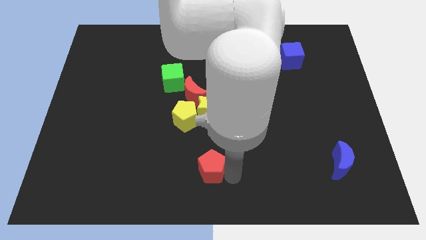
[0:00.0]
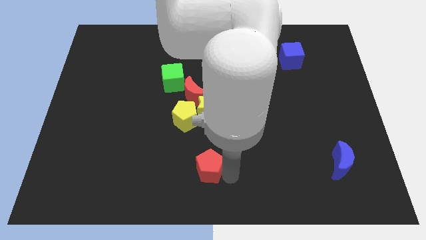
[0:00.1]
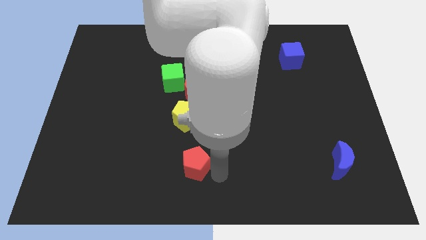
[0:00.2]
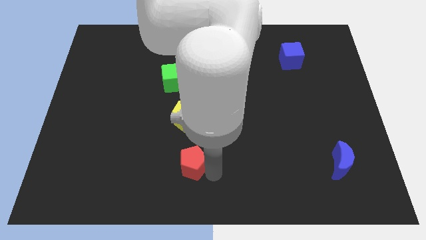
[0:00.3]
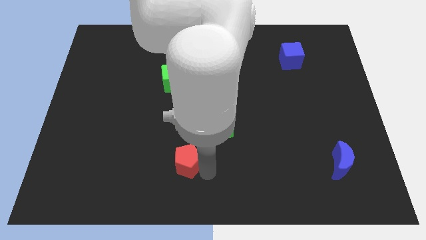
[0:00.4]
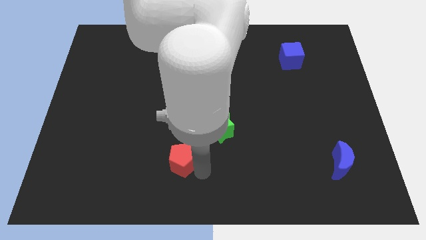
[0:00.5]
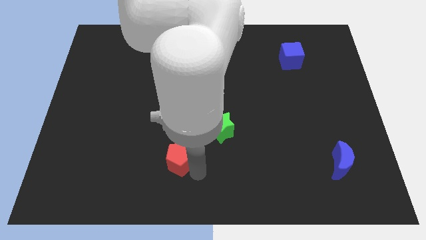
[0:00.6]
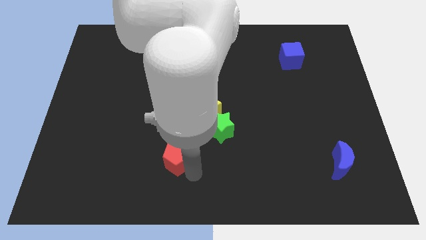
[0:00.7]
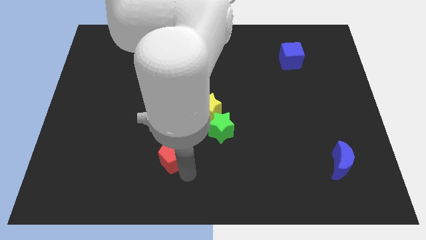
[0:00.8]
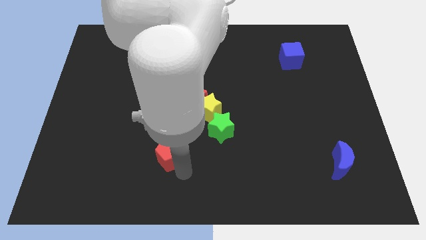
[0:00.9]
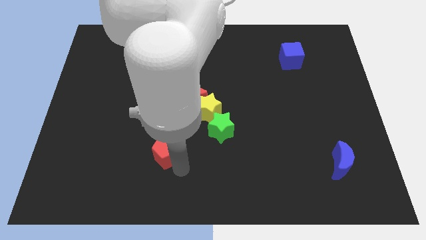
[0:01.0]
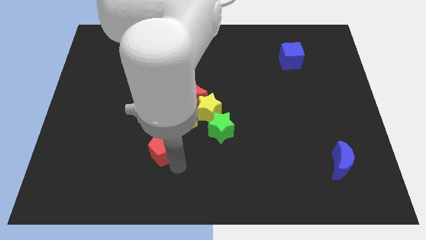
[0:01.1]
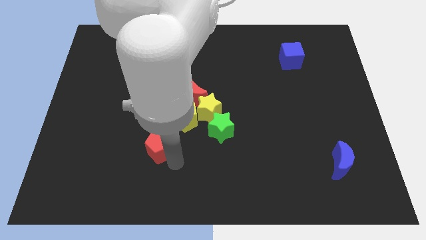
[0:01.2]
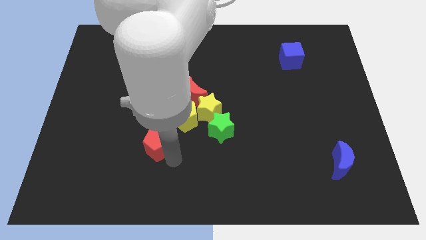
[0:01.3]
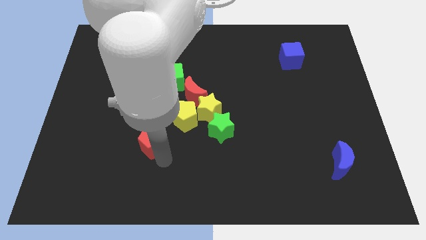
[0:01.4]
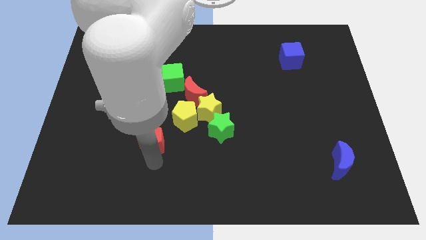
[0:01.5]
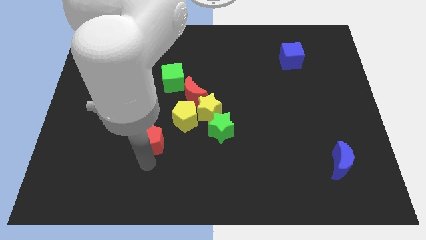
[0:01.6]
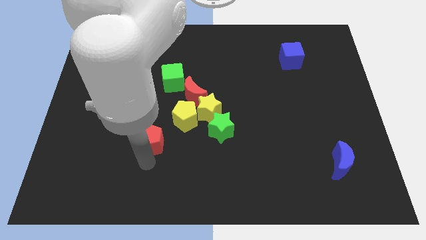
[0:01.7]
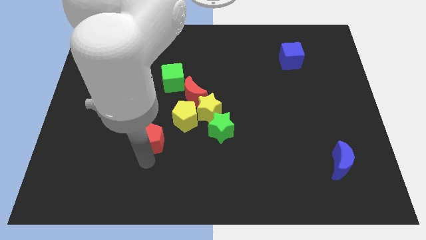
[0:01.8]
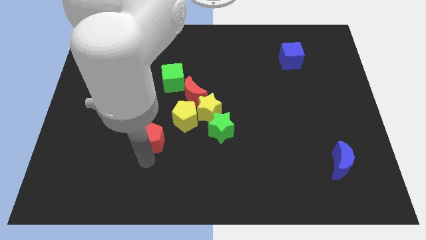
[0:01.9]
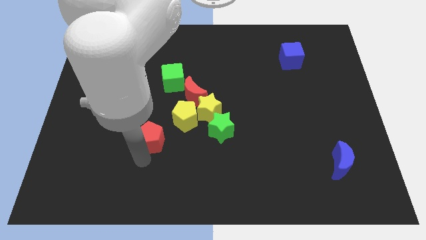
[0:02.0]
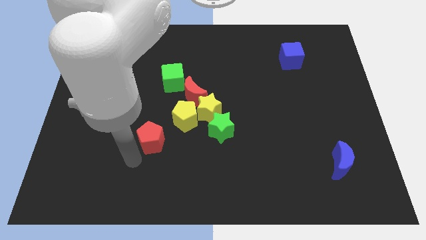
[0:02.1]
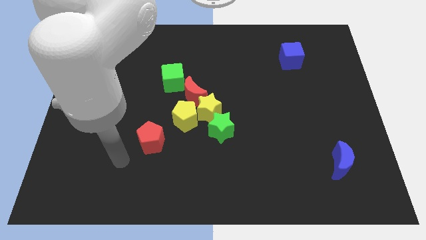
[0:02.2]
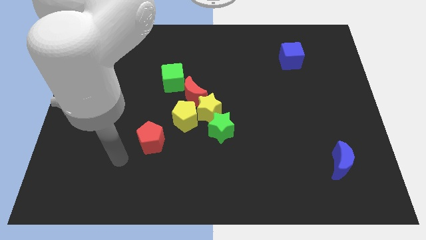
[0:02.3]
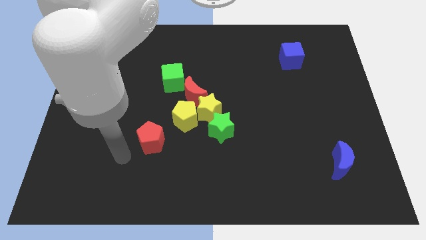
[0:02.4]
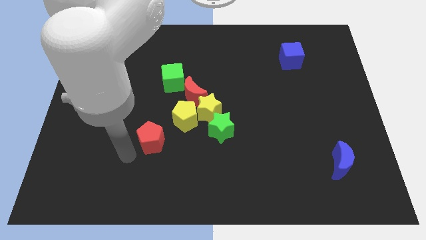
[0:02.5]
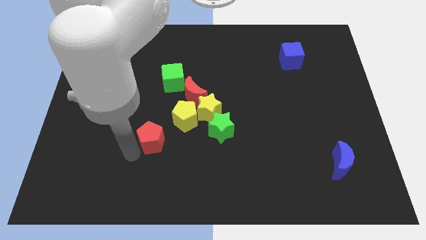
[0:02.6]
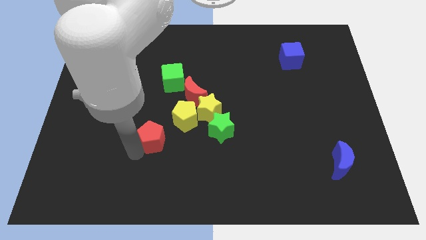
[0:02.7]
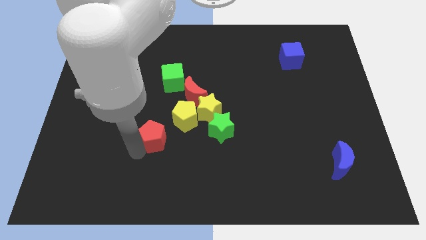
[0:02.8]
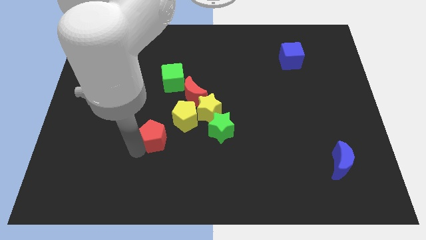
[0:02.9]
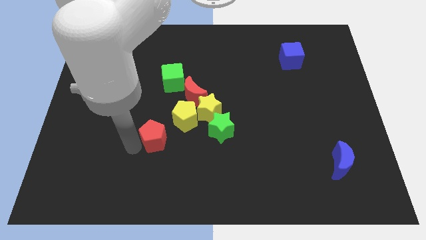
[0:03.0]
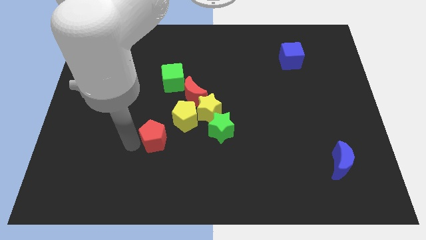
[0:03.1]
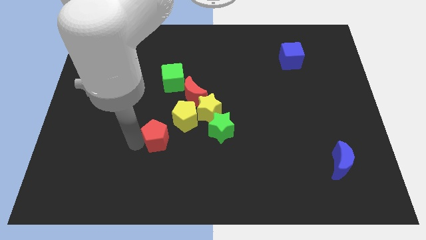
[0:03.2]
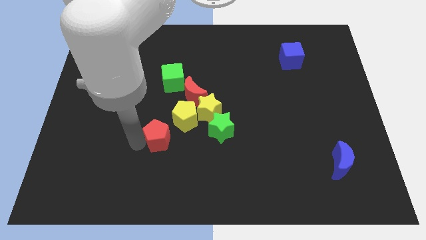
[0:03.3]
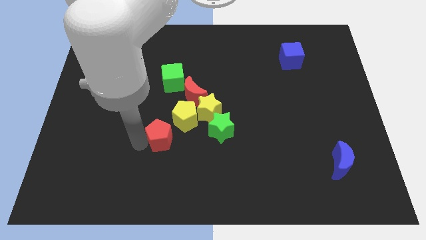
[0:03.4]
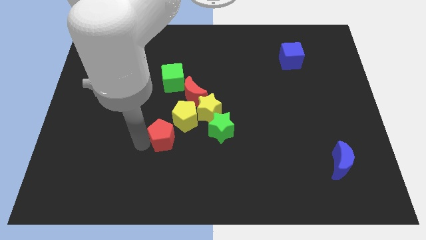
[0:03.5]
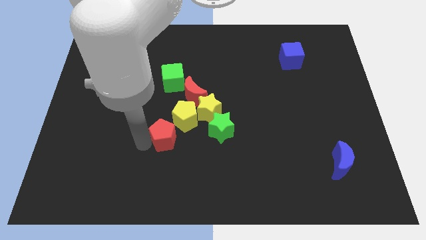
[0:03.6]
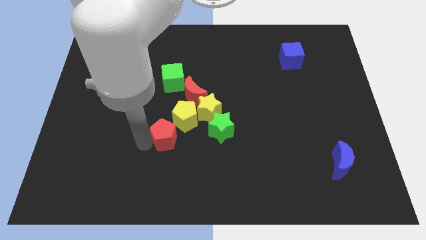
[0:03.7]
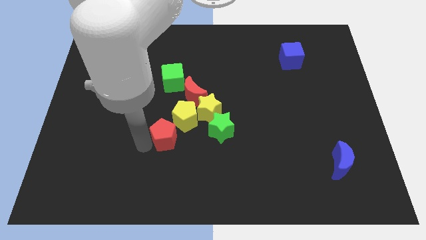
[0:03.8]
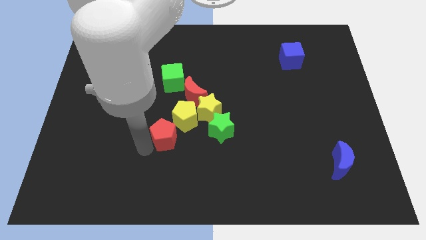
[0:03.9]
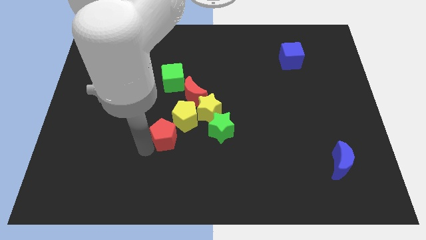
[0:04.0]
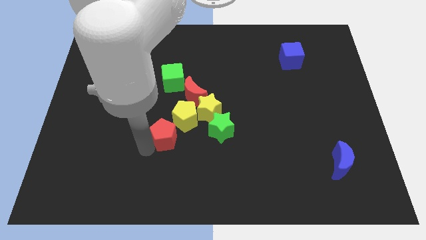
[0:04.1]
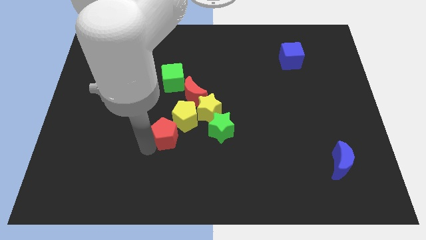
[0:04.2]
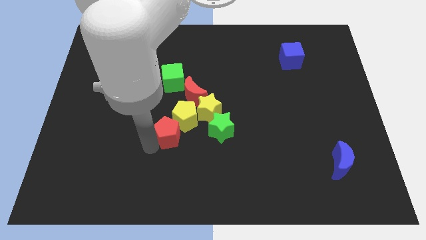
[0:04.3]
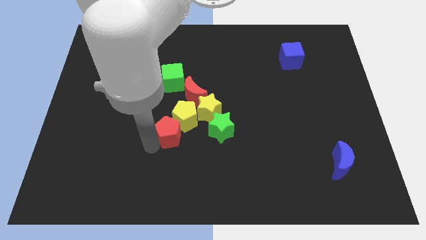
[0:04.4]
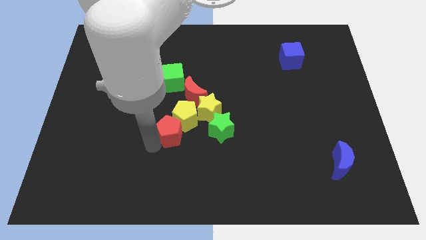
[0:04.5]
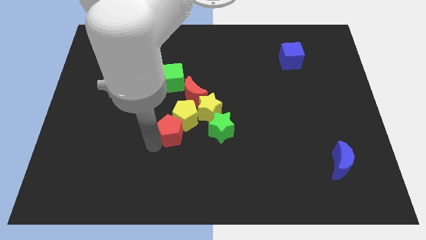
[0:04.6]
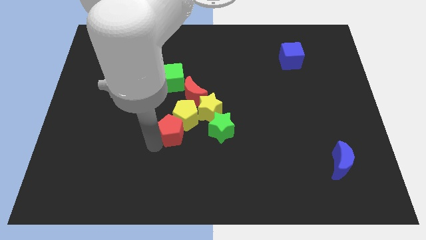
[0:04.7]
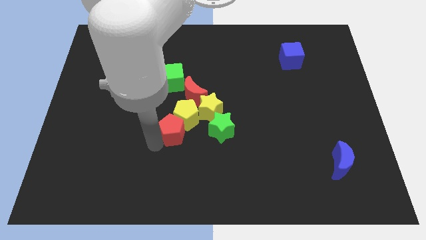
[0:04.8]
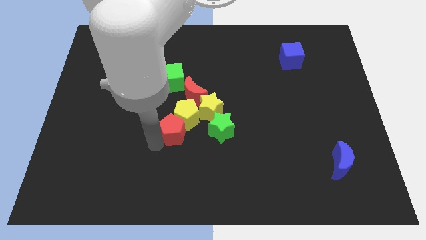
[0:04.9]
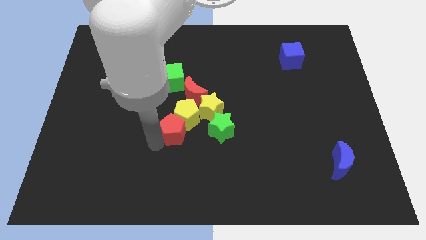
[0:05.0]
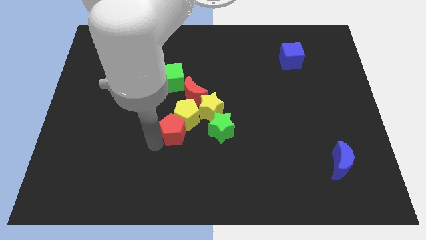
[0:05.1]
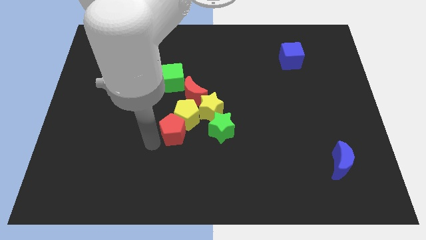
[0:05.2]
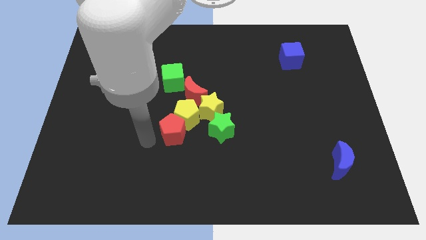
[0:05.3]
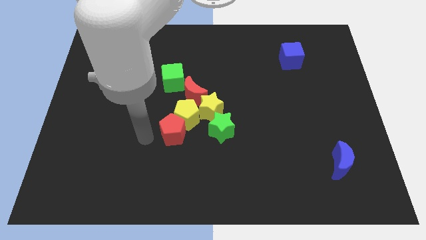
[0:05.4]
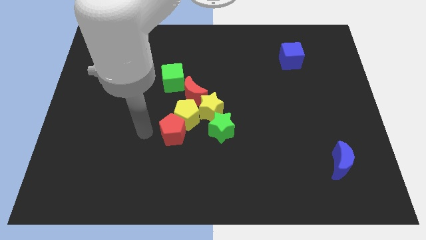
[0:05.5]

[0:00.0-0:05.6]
push the red pentagon into the yellow pentagon

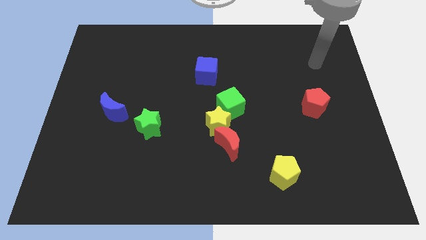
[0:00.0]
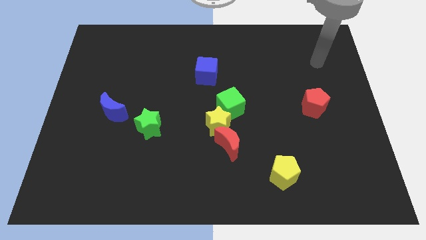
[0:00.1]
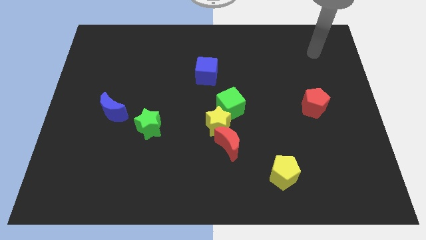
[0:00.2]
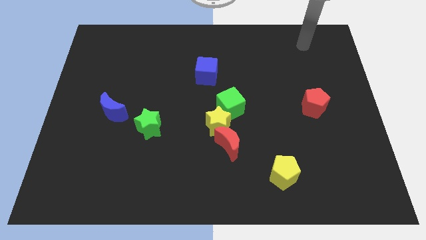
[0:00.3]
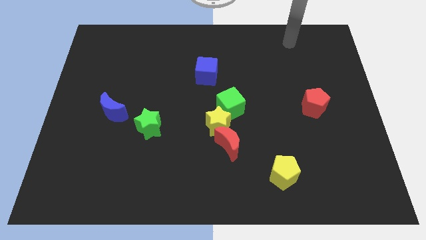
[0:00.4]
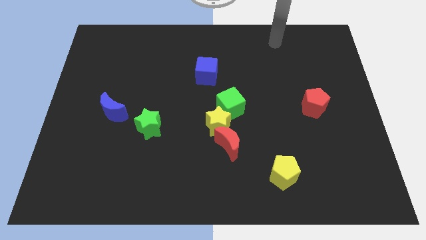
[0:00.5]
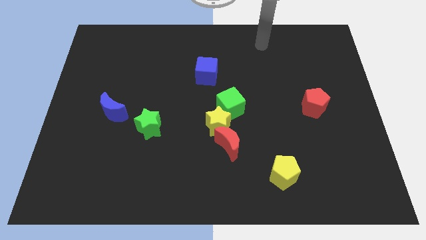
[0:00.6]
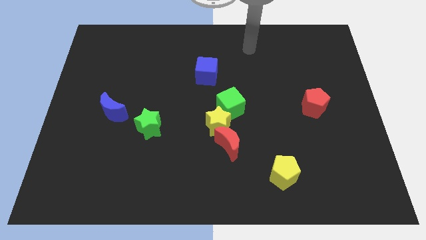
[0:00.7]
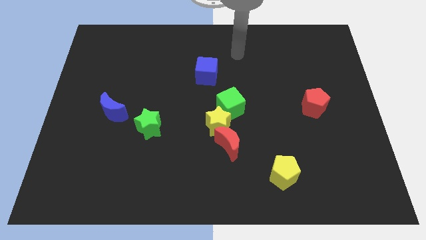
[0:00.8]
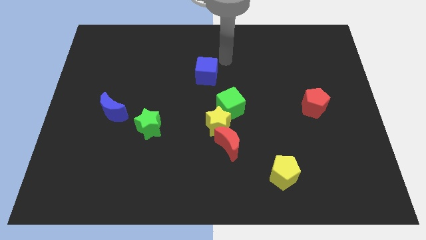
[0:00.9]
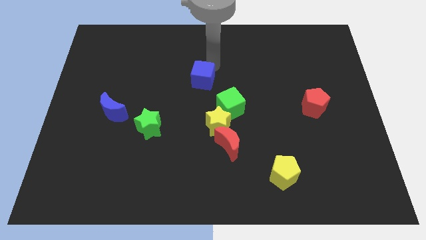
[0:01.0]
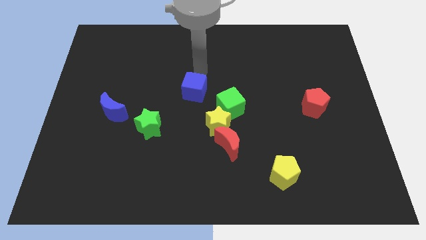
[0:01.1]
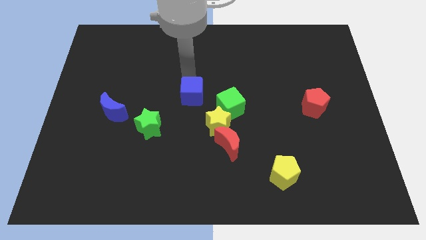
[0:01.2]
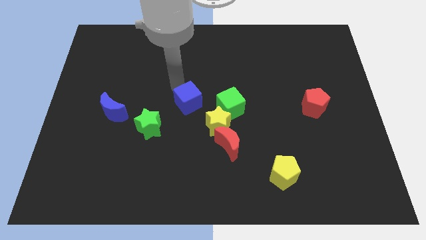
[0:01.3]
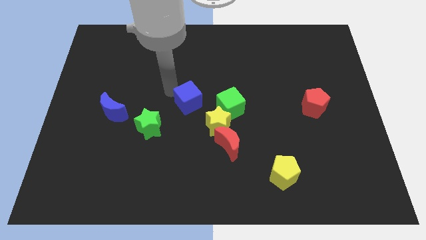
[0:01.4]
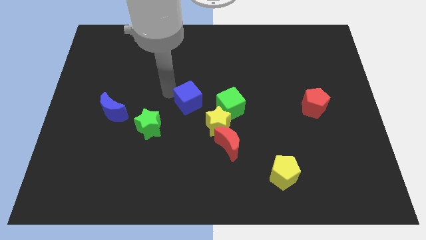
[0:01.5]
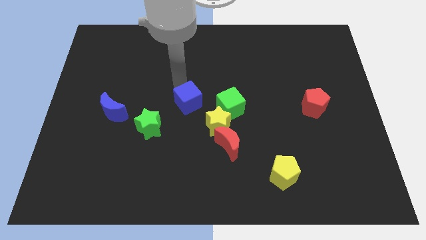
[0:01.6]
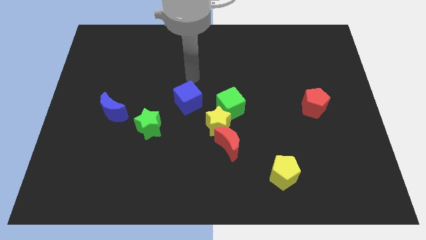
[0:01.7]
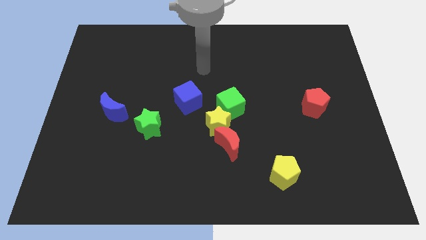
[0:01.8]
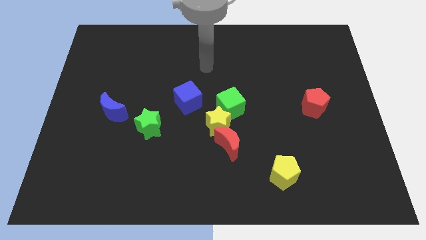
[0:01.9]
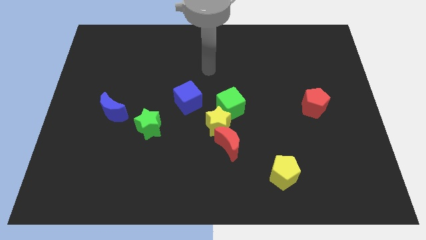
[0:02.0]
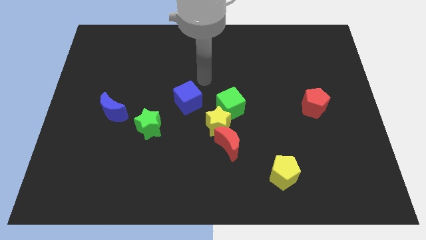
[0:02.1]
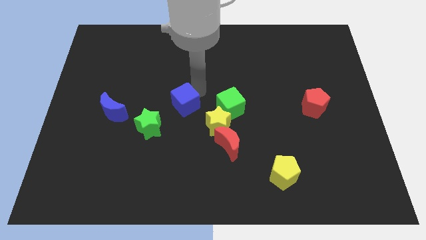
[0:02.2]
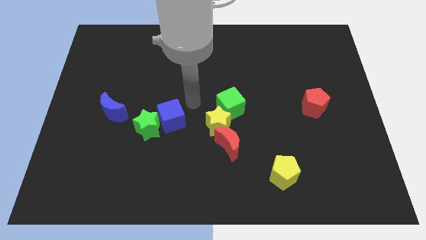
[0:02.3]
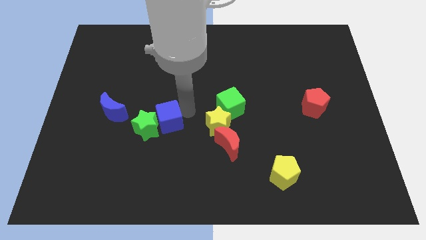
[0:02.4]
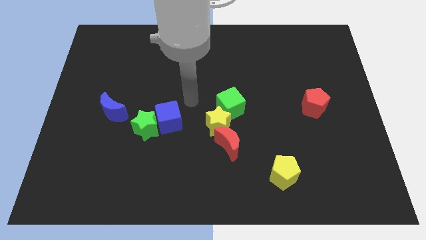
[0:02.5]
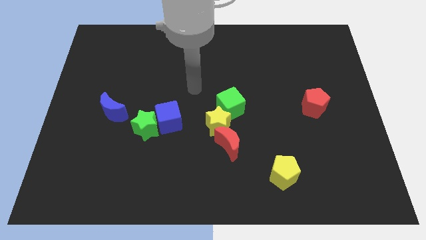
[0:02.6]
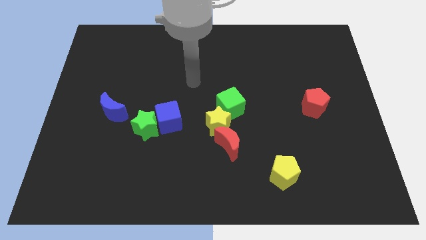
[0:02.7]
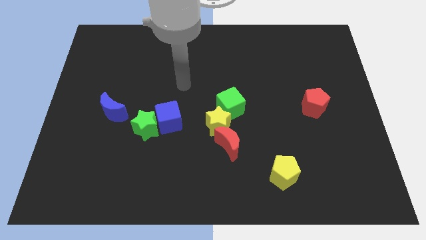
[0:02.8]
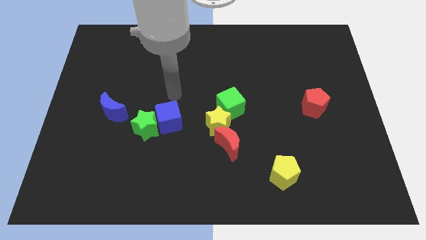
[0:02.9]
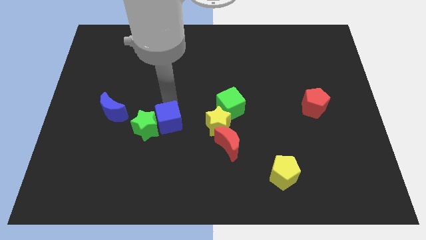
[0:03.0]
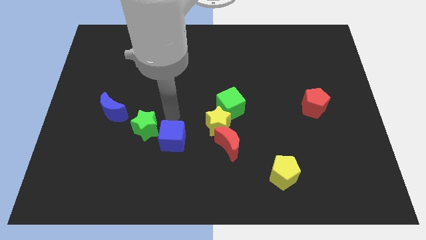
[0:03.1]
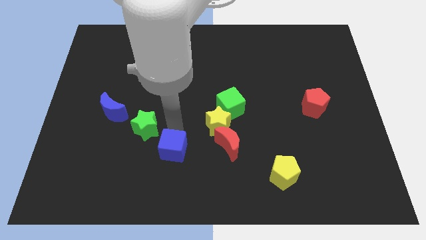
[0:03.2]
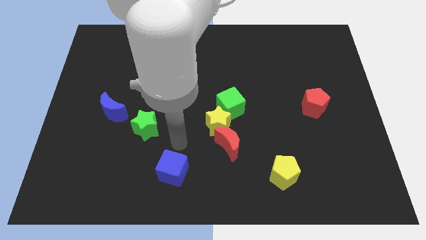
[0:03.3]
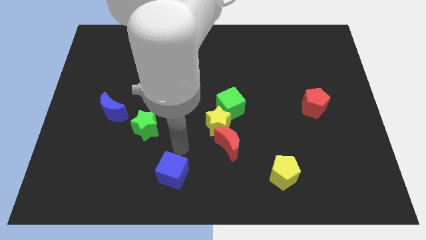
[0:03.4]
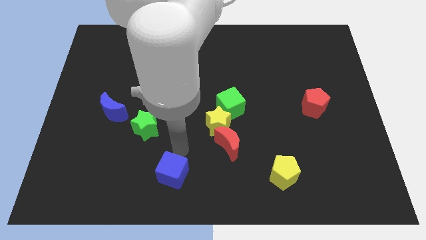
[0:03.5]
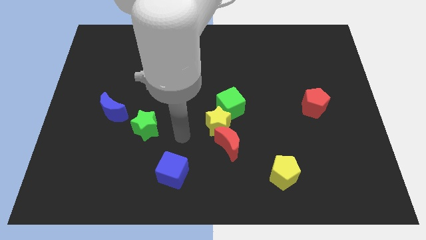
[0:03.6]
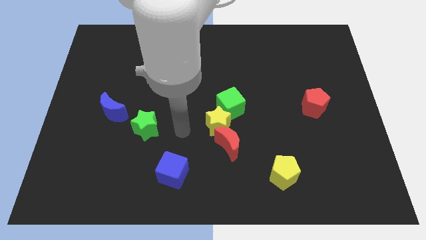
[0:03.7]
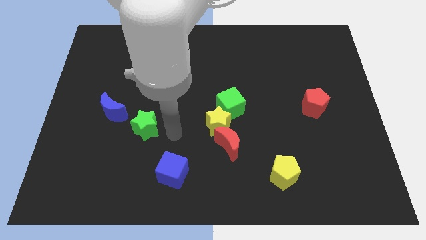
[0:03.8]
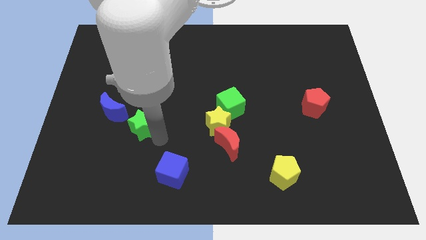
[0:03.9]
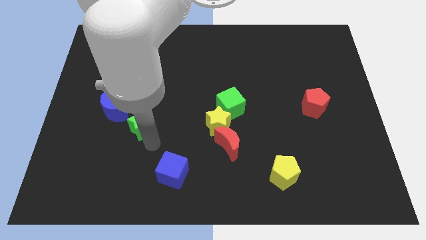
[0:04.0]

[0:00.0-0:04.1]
place the blue cube towards the bottom right side of the green star
